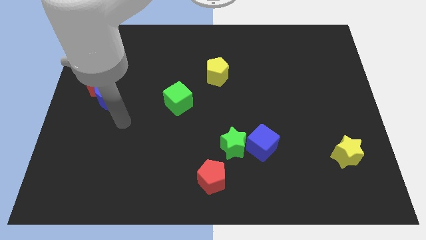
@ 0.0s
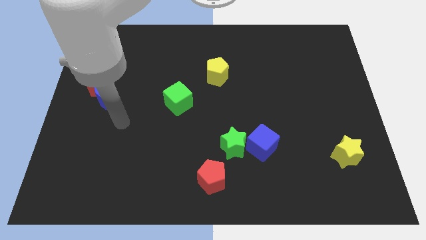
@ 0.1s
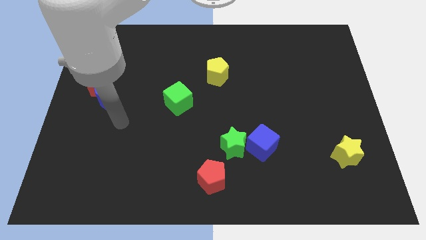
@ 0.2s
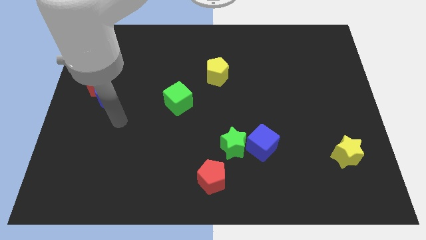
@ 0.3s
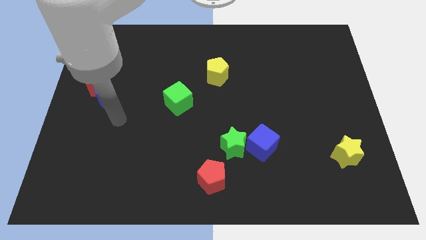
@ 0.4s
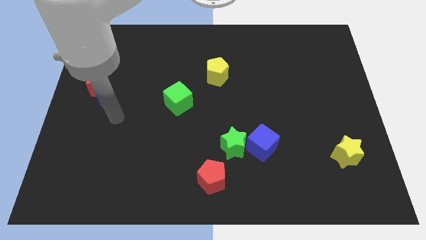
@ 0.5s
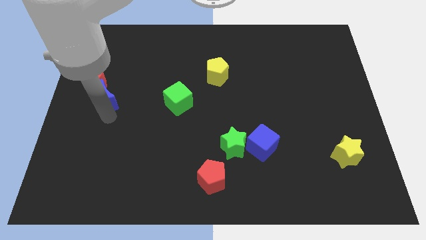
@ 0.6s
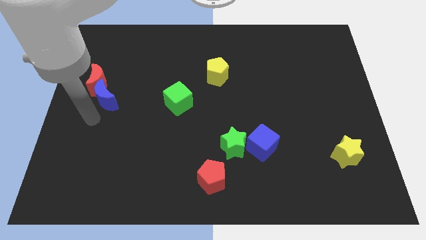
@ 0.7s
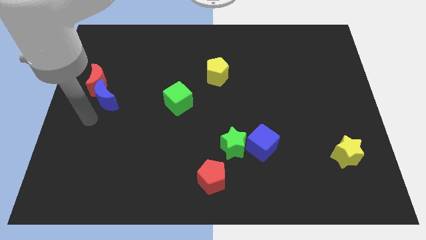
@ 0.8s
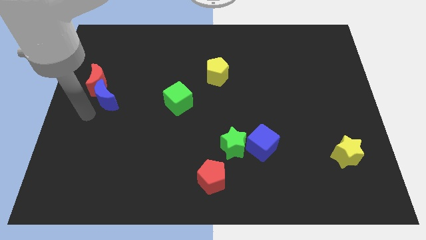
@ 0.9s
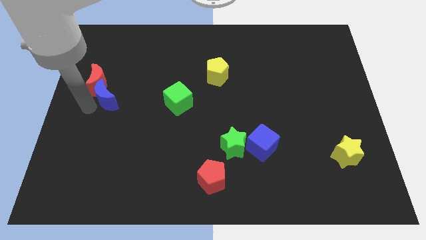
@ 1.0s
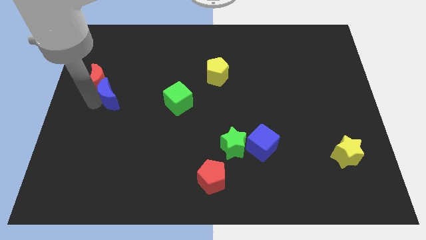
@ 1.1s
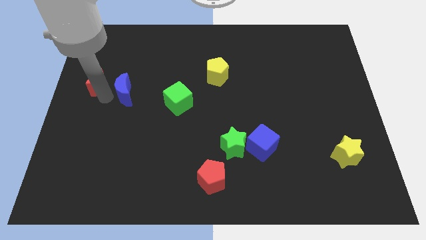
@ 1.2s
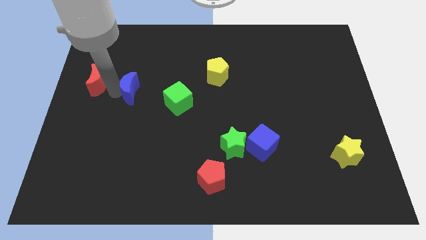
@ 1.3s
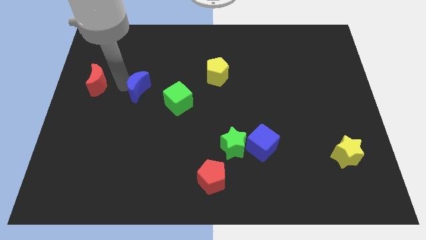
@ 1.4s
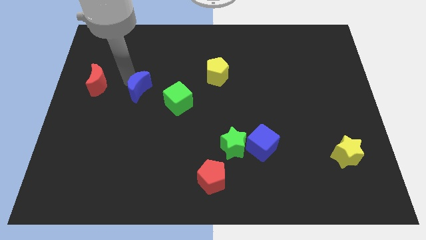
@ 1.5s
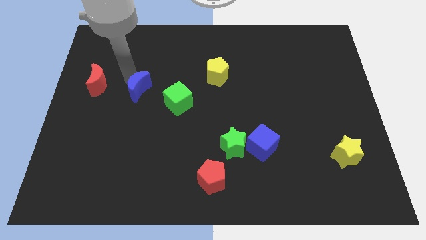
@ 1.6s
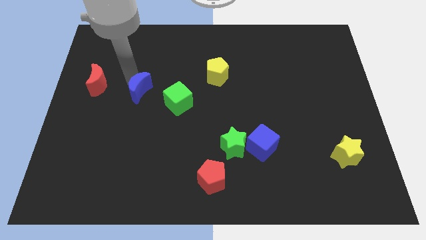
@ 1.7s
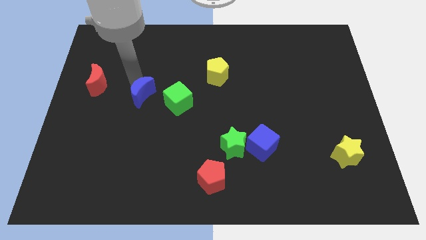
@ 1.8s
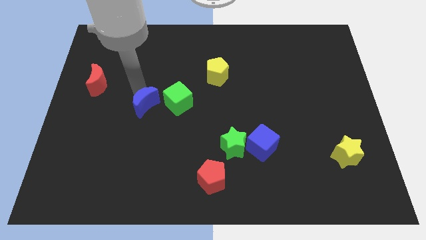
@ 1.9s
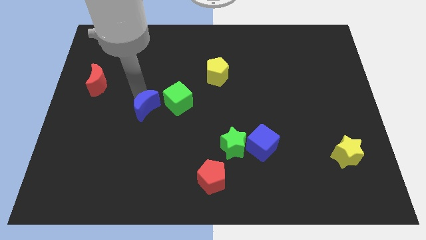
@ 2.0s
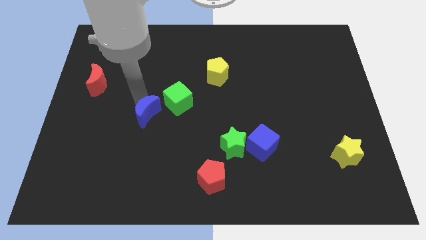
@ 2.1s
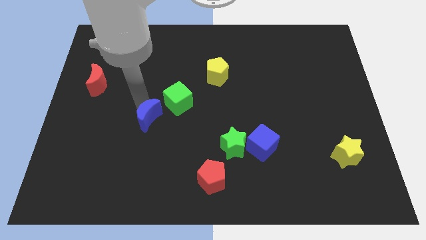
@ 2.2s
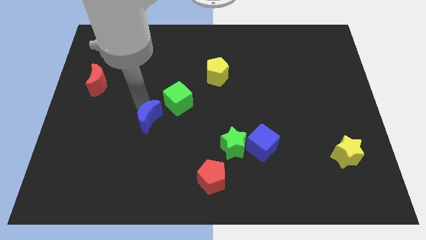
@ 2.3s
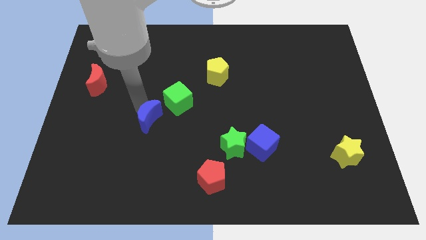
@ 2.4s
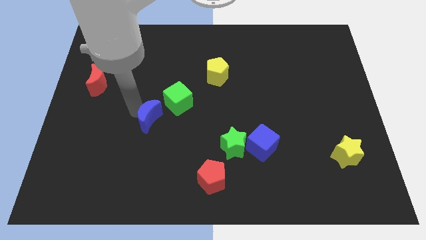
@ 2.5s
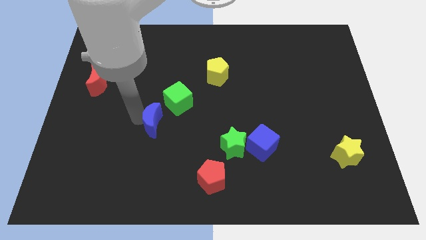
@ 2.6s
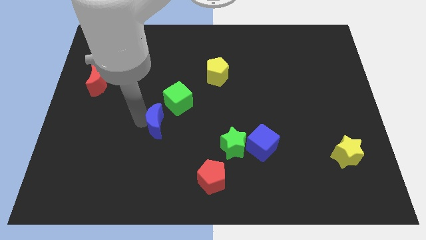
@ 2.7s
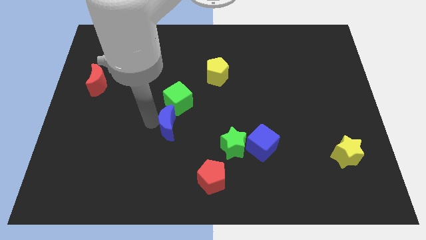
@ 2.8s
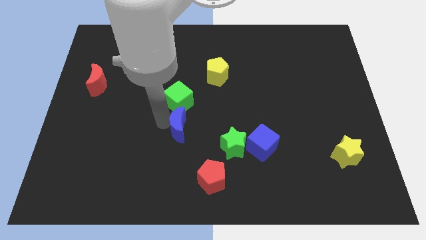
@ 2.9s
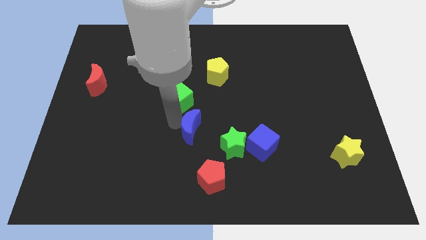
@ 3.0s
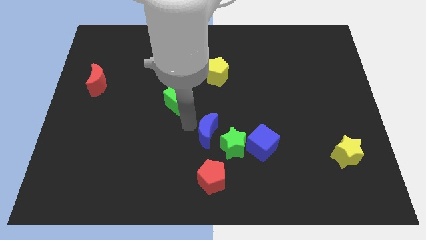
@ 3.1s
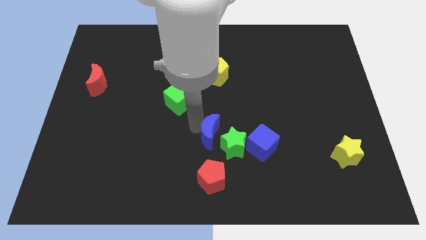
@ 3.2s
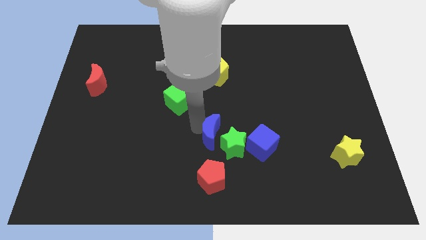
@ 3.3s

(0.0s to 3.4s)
put the blue moon above the red pentagon

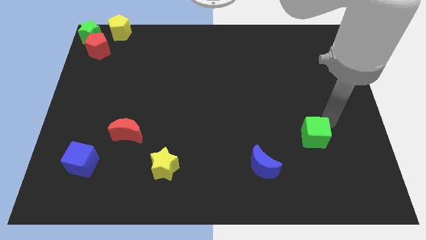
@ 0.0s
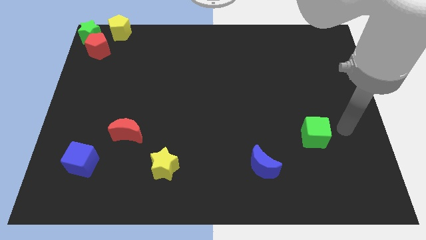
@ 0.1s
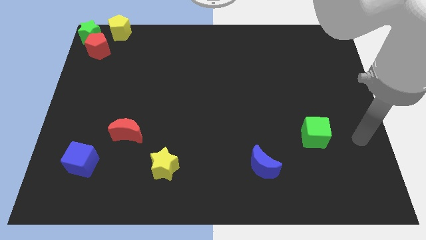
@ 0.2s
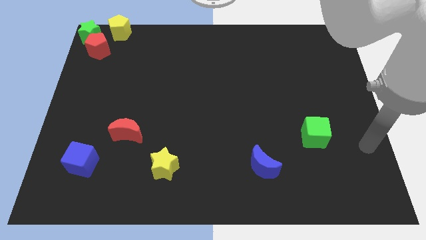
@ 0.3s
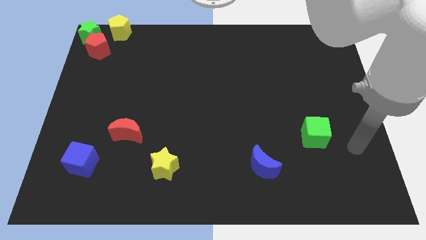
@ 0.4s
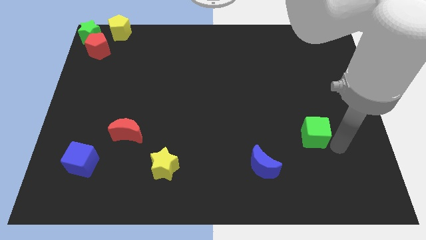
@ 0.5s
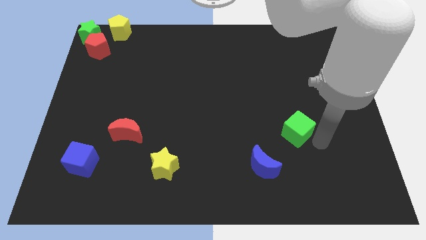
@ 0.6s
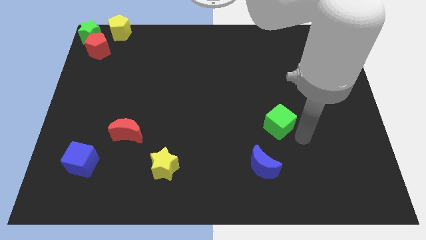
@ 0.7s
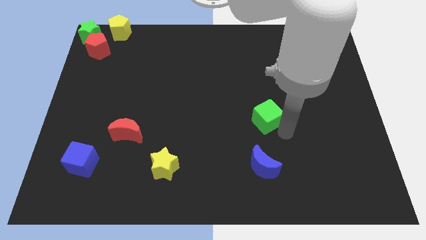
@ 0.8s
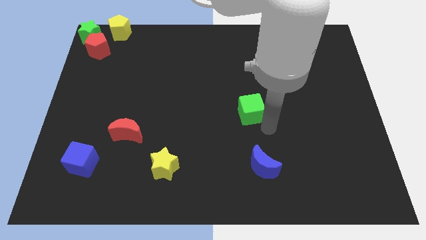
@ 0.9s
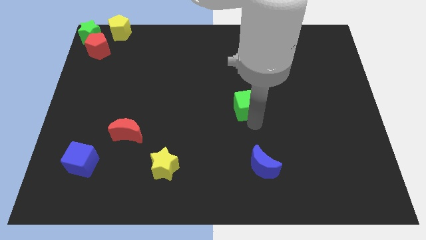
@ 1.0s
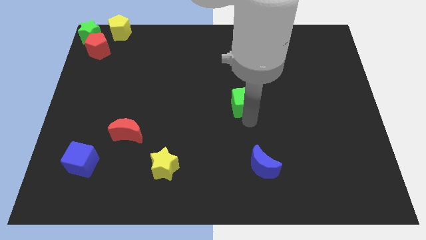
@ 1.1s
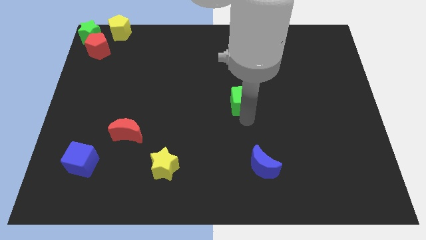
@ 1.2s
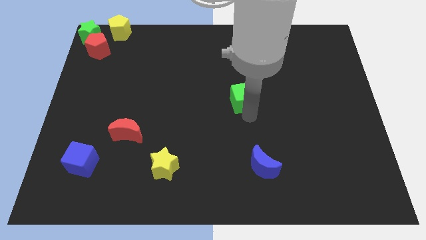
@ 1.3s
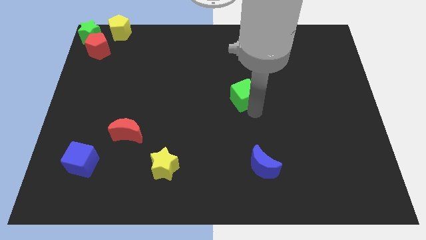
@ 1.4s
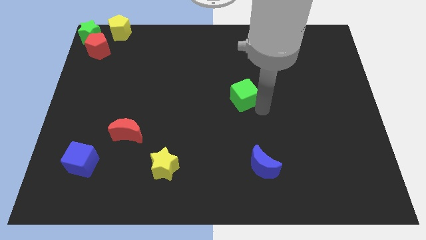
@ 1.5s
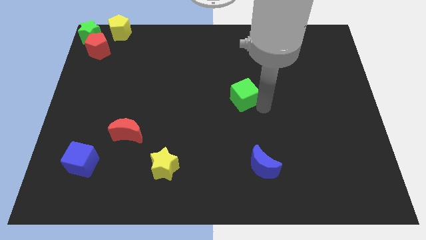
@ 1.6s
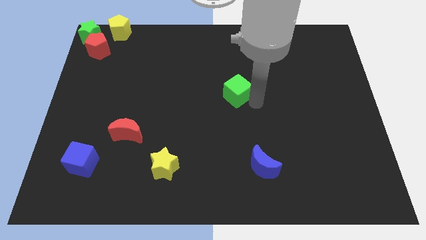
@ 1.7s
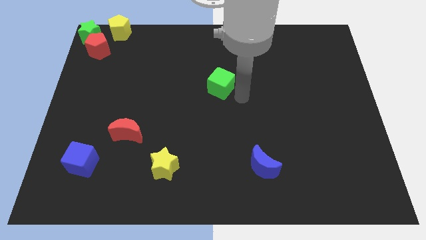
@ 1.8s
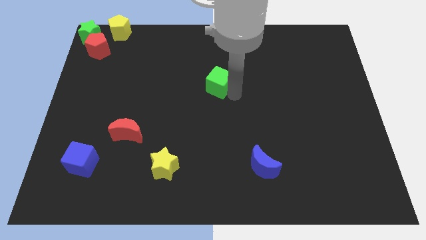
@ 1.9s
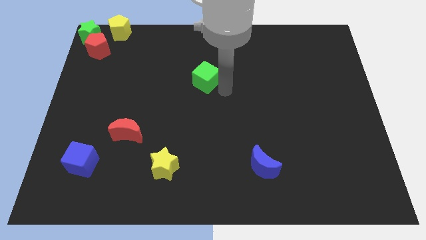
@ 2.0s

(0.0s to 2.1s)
move the green cube towards the top center

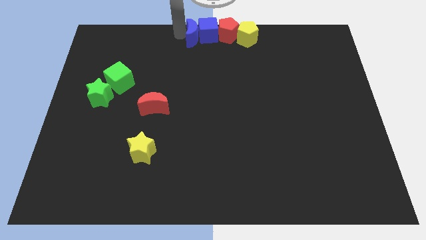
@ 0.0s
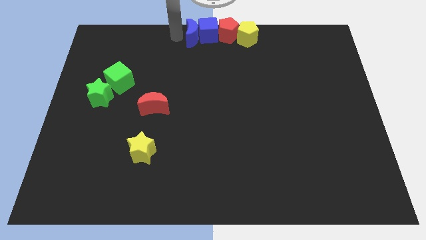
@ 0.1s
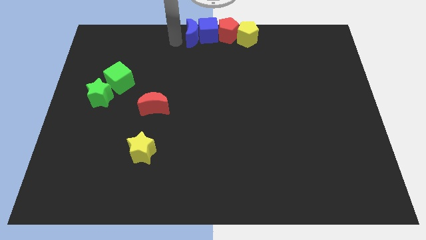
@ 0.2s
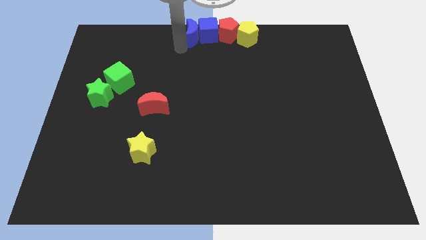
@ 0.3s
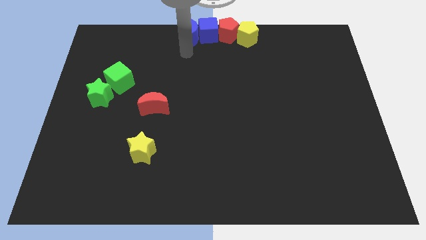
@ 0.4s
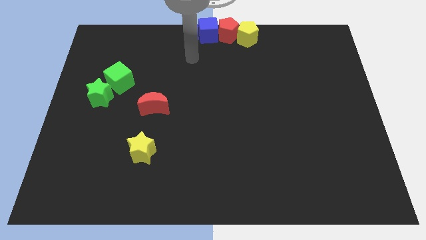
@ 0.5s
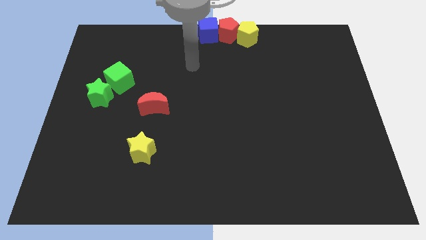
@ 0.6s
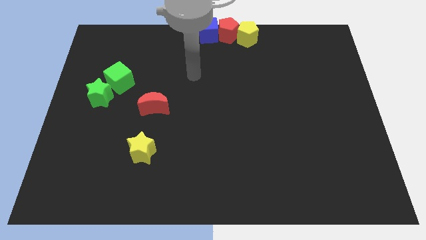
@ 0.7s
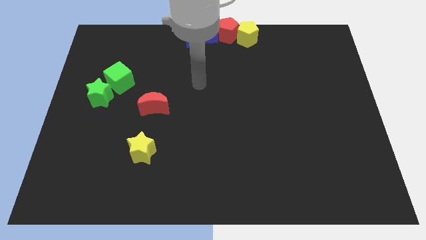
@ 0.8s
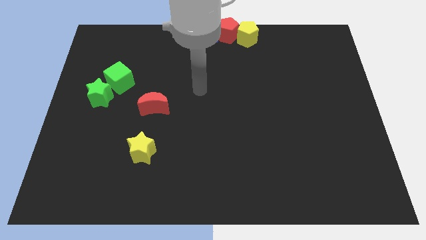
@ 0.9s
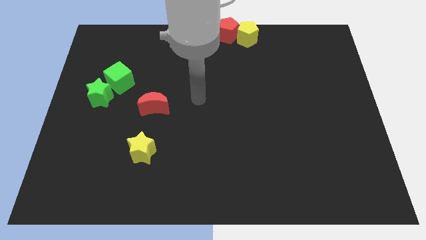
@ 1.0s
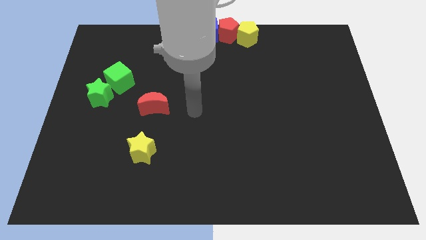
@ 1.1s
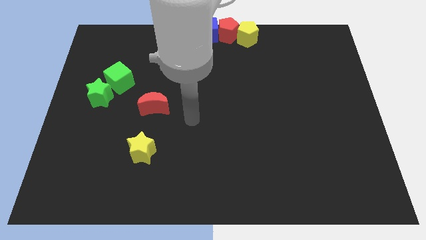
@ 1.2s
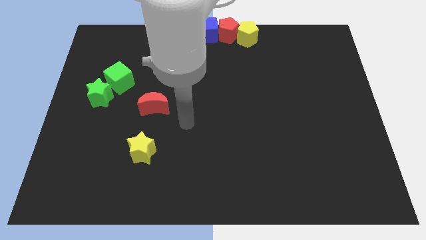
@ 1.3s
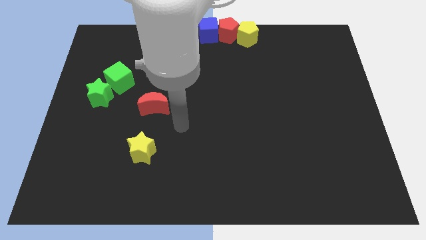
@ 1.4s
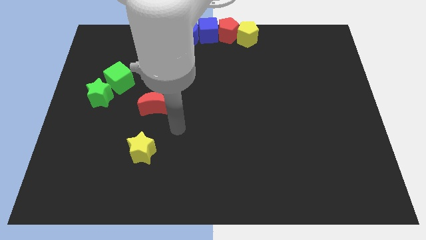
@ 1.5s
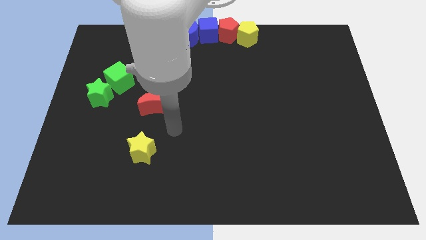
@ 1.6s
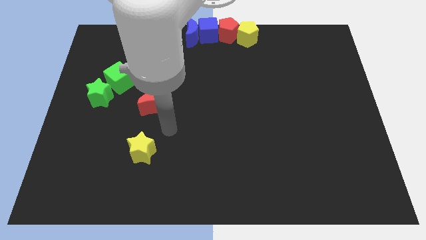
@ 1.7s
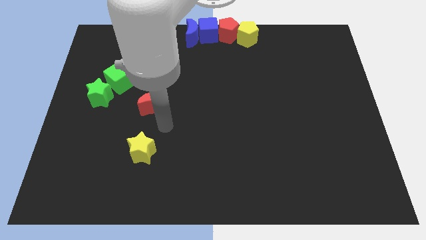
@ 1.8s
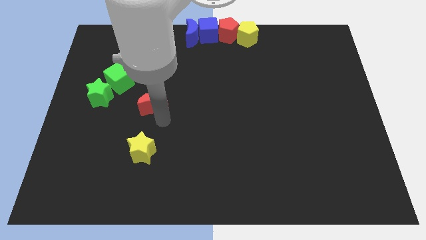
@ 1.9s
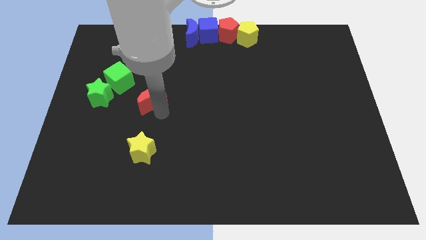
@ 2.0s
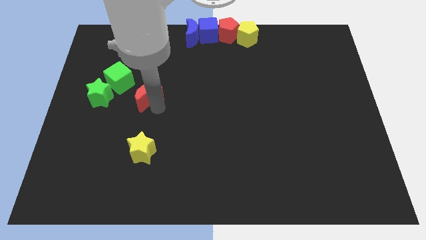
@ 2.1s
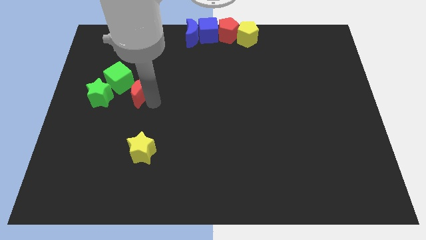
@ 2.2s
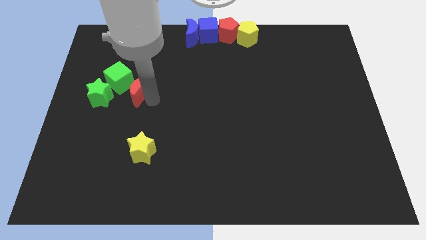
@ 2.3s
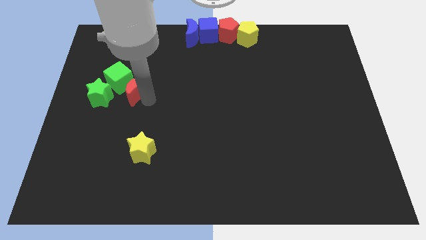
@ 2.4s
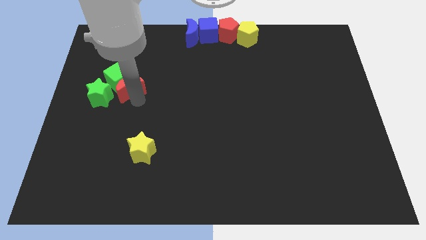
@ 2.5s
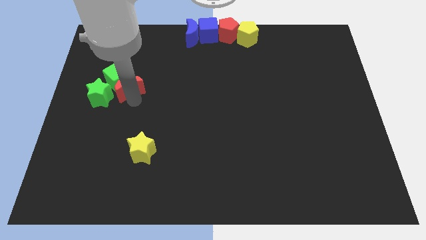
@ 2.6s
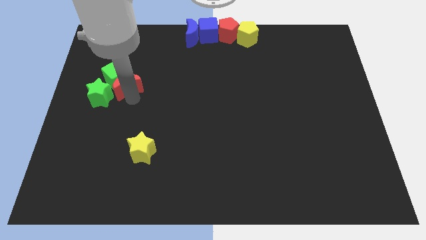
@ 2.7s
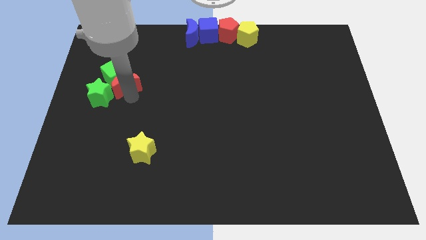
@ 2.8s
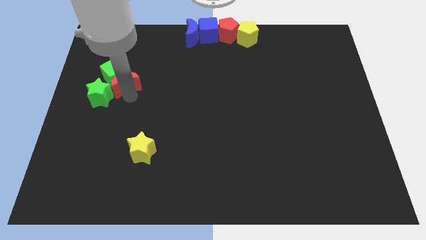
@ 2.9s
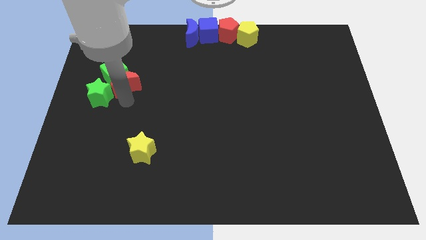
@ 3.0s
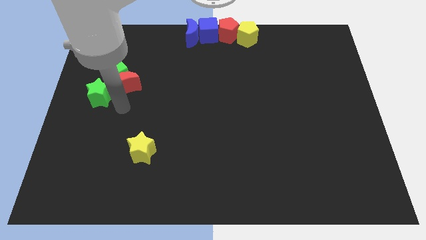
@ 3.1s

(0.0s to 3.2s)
slide the red crescent into the green cube

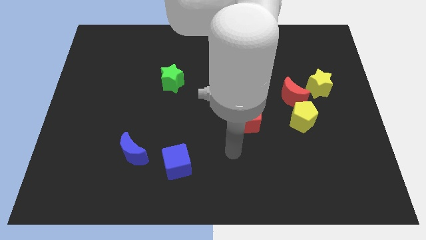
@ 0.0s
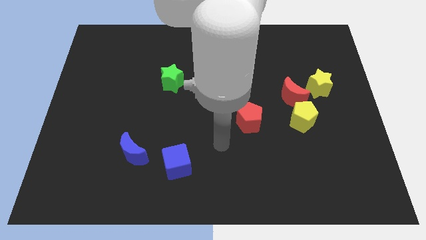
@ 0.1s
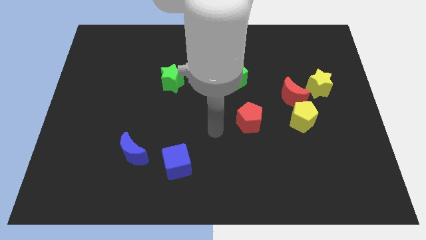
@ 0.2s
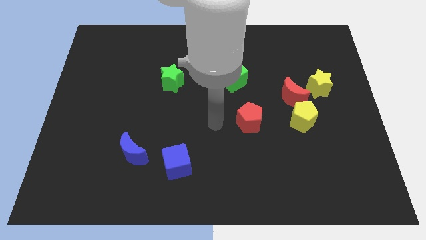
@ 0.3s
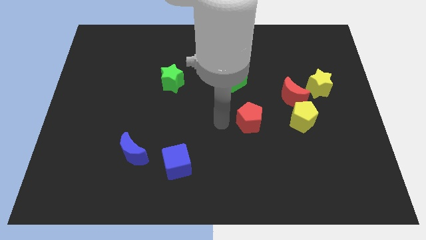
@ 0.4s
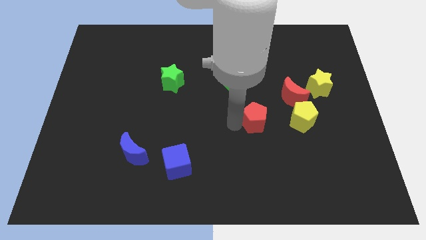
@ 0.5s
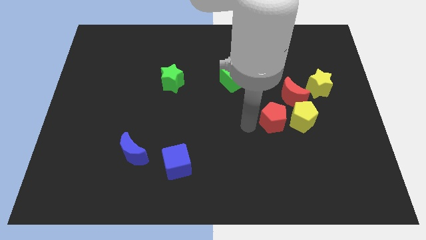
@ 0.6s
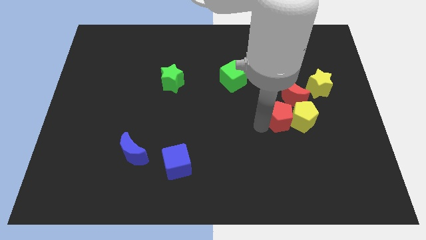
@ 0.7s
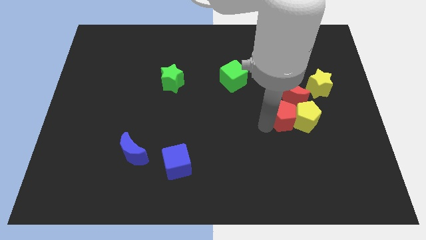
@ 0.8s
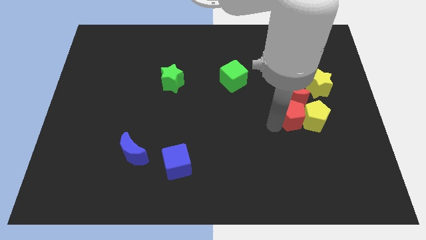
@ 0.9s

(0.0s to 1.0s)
push red pentagon into the yellow pentagon
